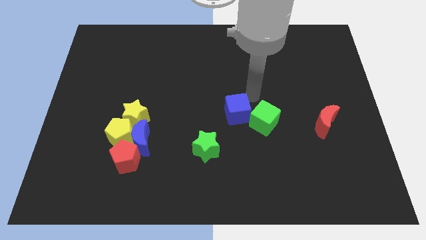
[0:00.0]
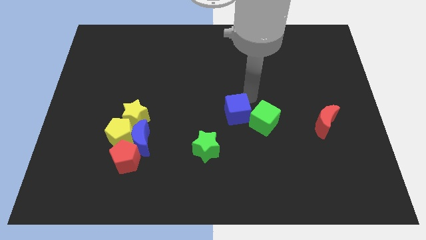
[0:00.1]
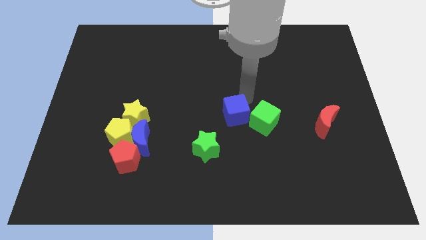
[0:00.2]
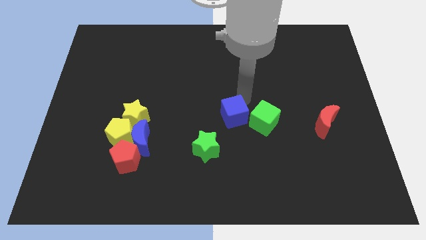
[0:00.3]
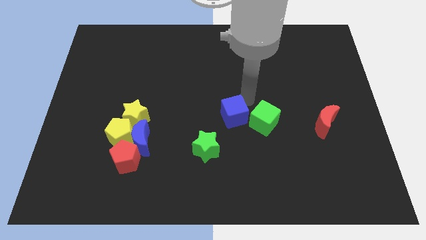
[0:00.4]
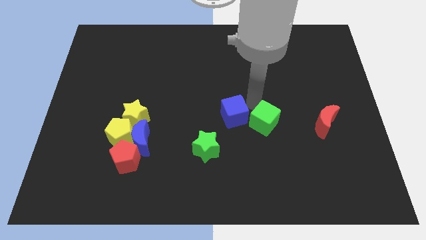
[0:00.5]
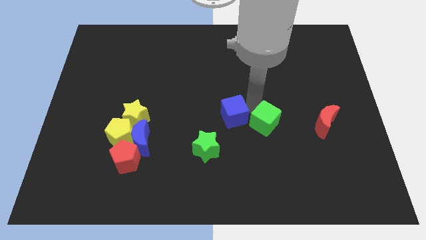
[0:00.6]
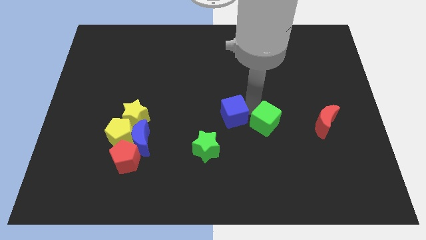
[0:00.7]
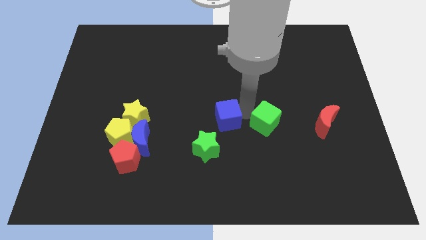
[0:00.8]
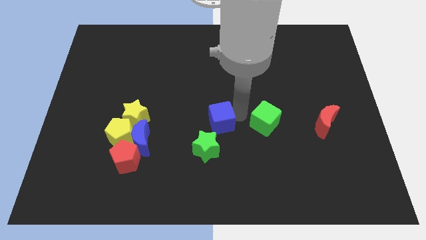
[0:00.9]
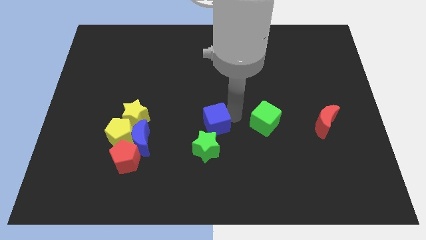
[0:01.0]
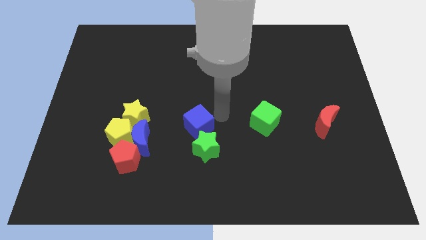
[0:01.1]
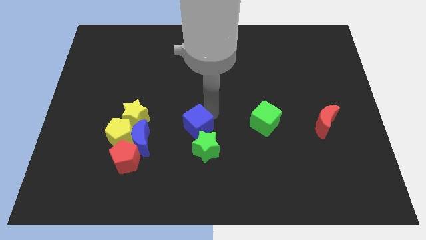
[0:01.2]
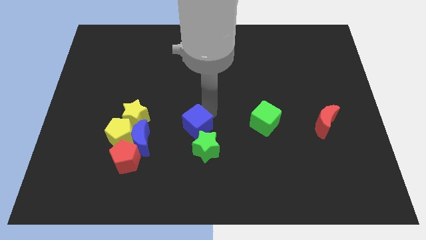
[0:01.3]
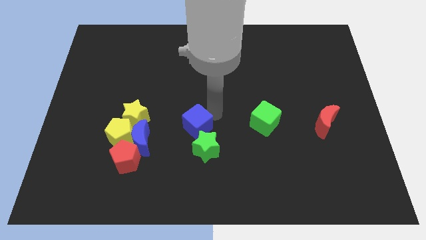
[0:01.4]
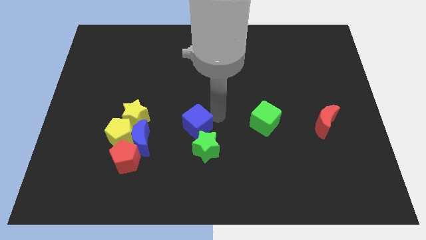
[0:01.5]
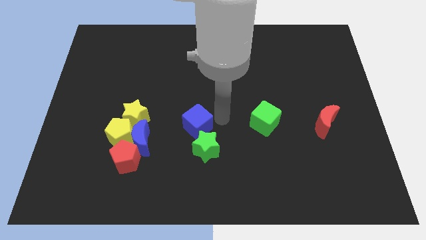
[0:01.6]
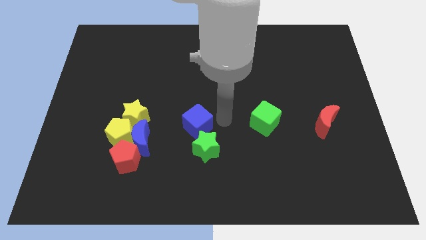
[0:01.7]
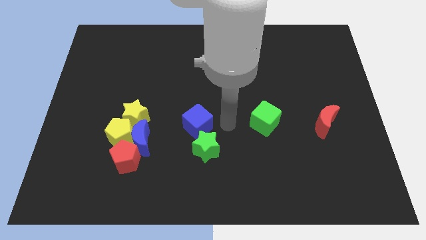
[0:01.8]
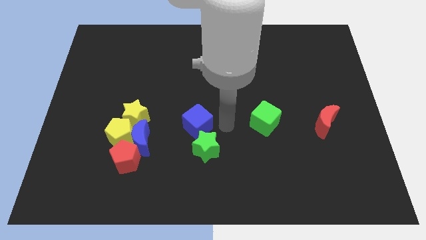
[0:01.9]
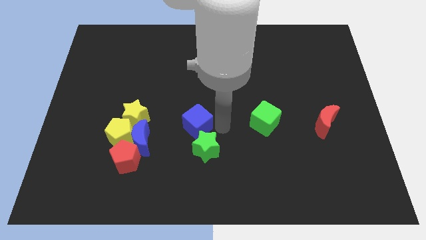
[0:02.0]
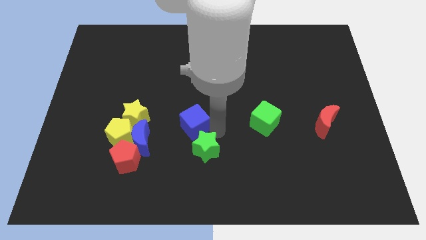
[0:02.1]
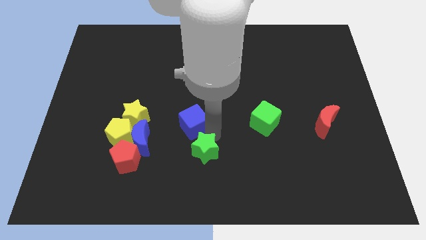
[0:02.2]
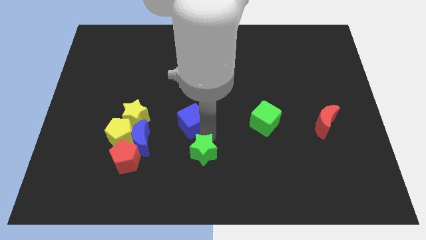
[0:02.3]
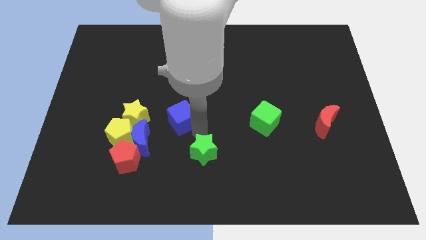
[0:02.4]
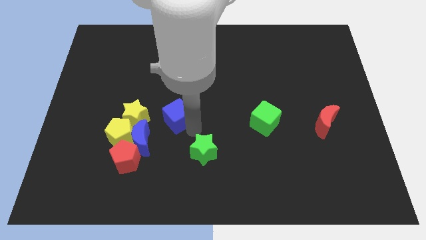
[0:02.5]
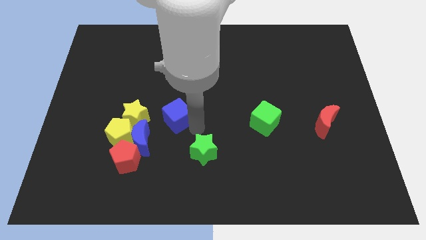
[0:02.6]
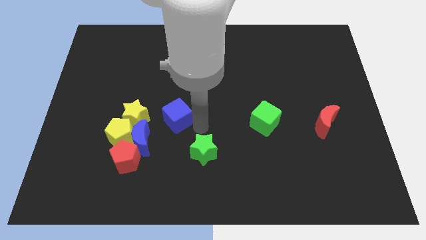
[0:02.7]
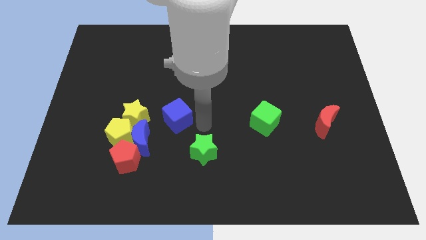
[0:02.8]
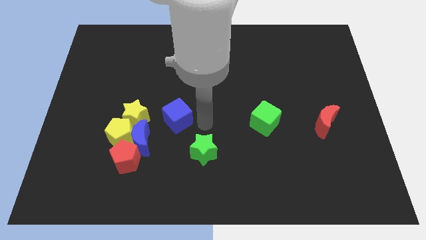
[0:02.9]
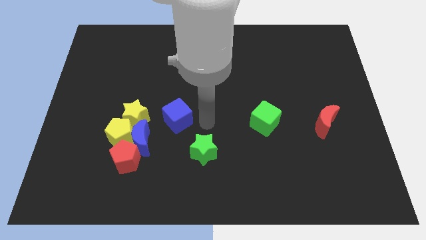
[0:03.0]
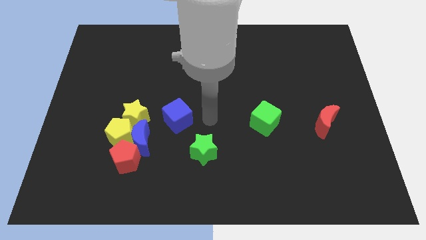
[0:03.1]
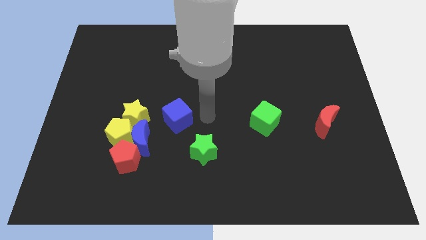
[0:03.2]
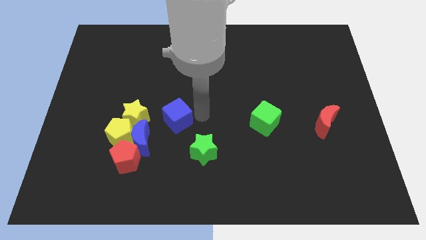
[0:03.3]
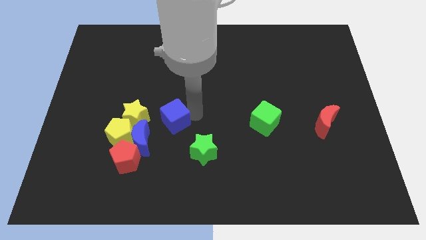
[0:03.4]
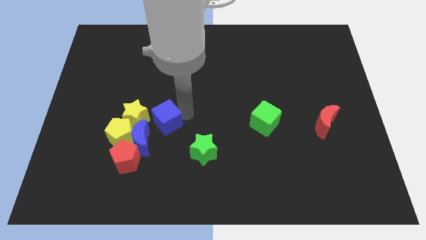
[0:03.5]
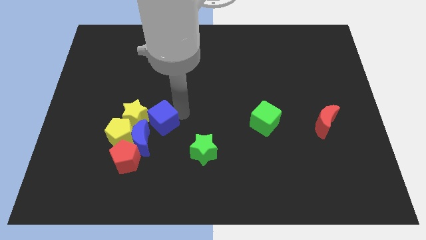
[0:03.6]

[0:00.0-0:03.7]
separate the blue cube from the green cube

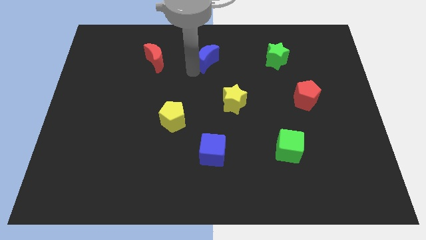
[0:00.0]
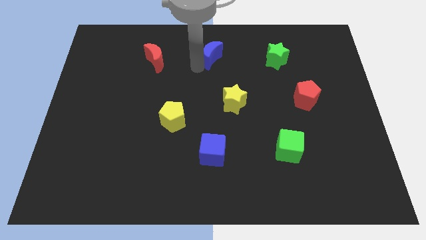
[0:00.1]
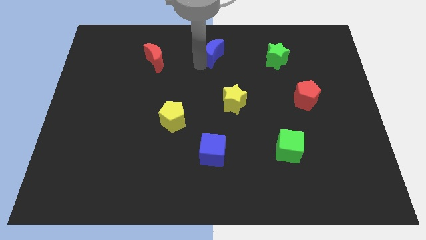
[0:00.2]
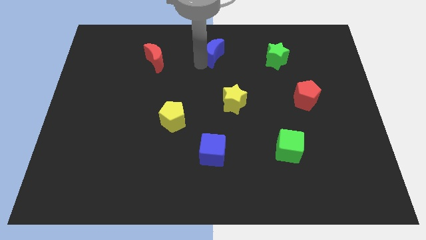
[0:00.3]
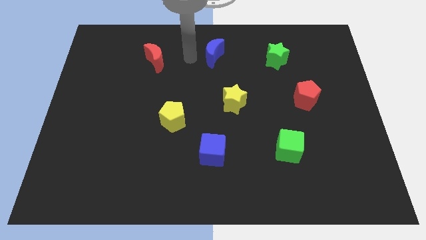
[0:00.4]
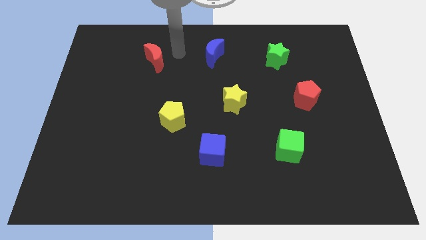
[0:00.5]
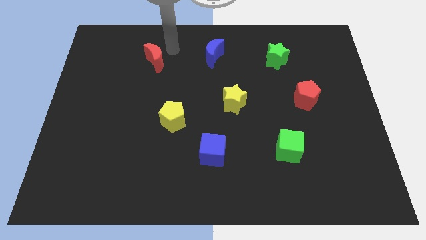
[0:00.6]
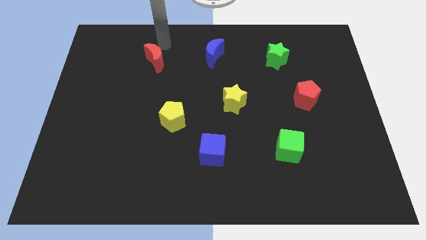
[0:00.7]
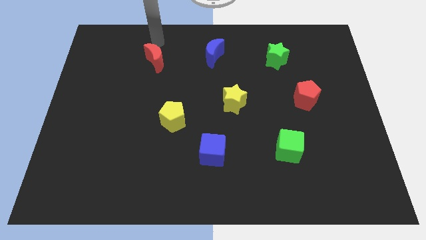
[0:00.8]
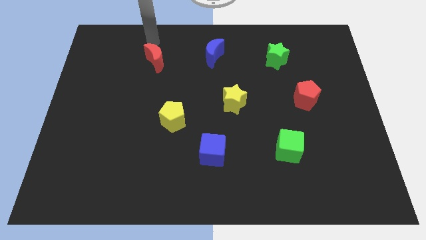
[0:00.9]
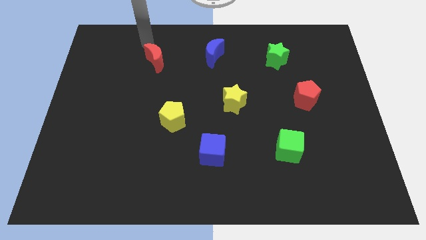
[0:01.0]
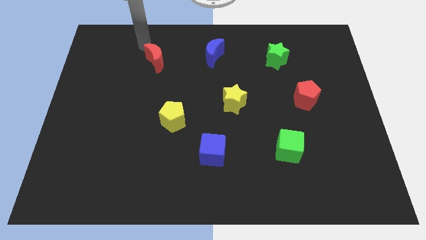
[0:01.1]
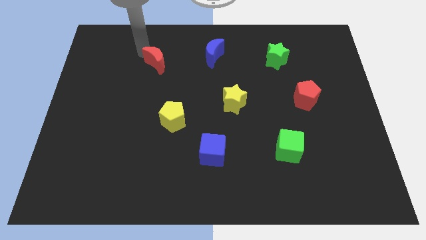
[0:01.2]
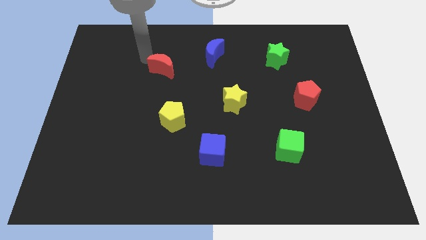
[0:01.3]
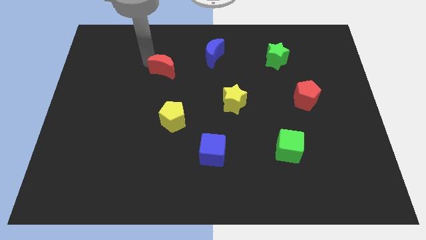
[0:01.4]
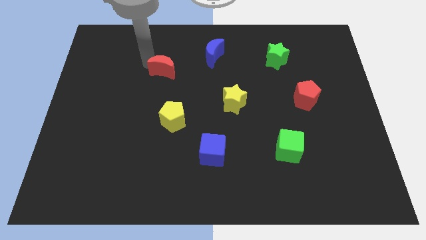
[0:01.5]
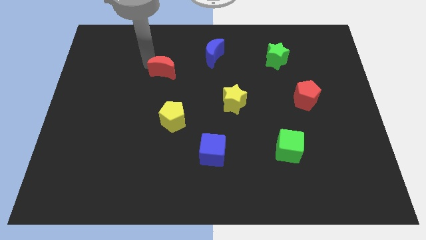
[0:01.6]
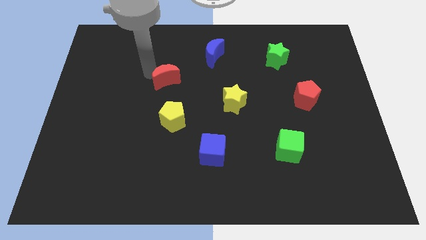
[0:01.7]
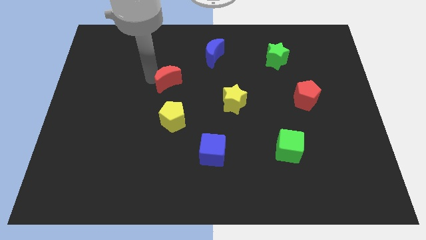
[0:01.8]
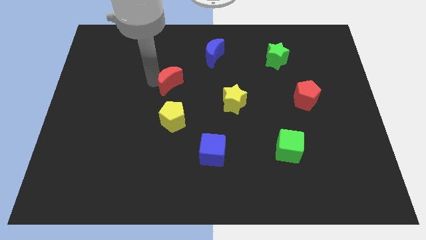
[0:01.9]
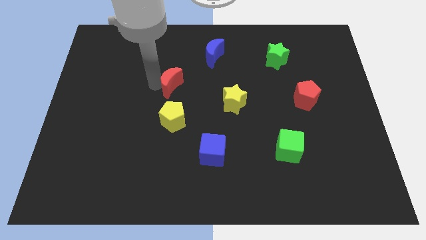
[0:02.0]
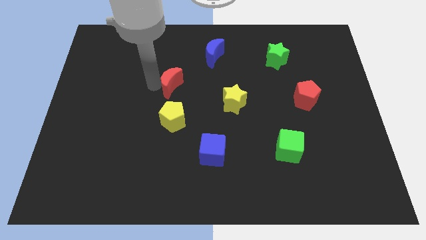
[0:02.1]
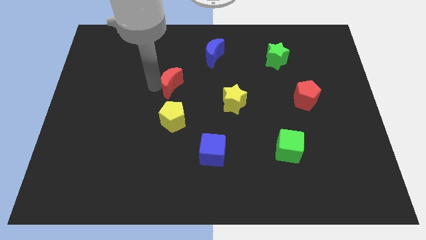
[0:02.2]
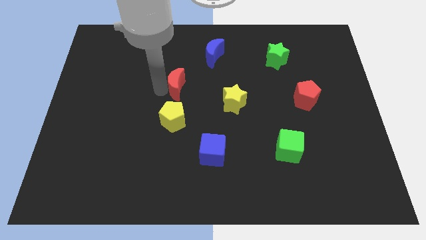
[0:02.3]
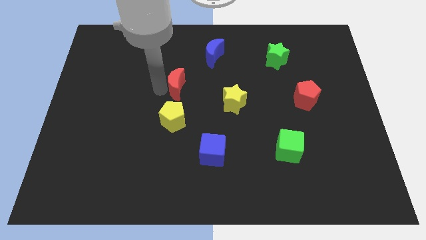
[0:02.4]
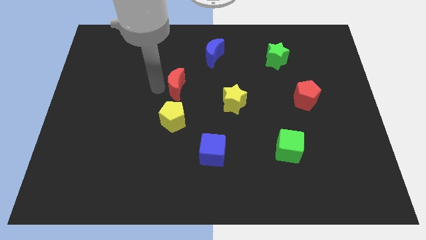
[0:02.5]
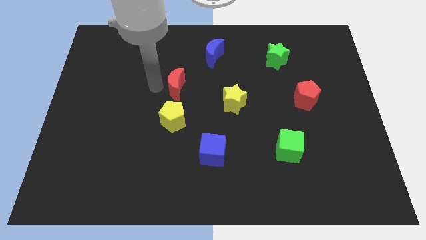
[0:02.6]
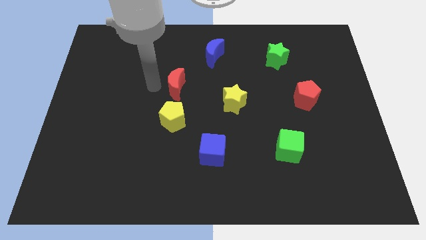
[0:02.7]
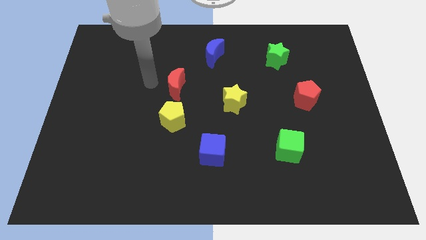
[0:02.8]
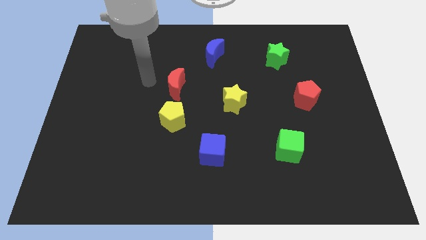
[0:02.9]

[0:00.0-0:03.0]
move the red moon towards the yellow pentagon

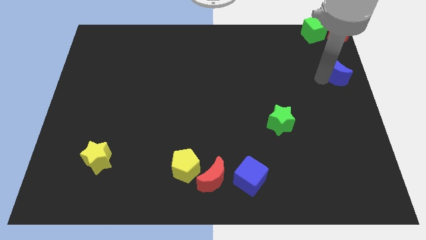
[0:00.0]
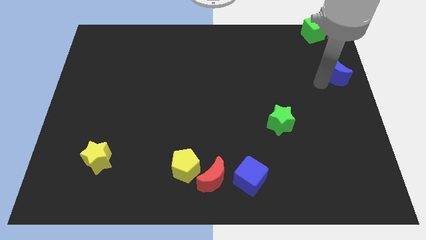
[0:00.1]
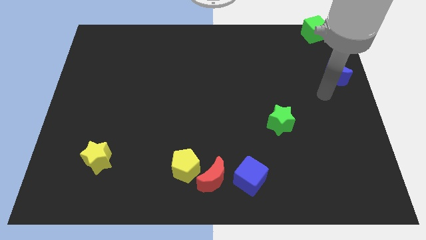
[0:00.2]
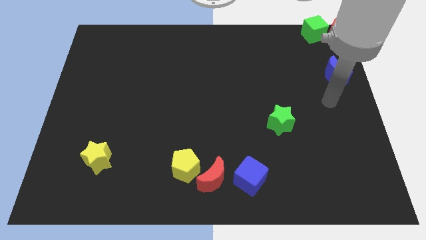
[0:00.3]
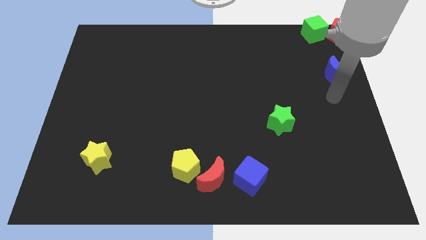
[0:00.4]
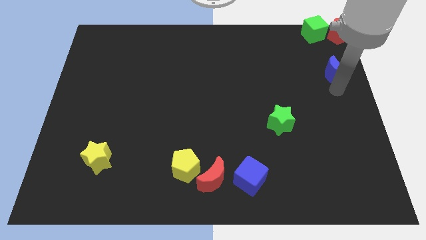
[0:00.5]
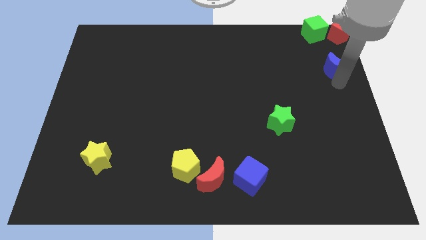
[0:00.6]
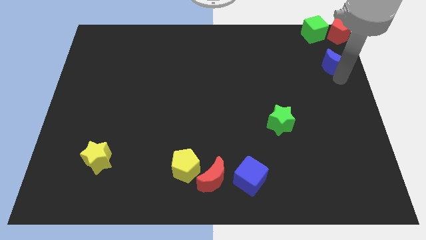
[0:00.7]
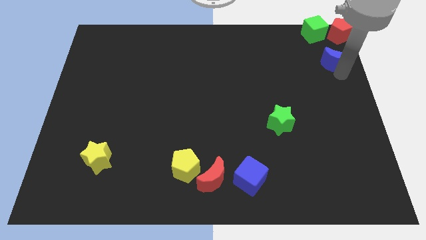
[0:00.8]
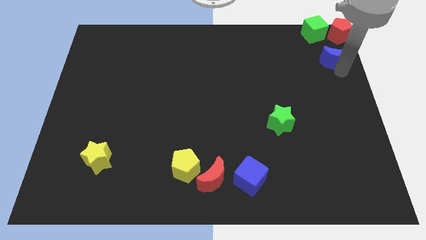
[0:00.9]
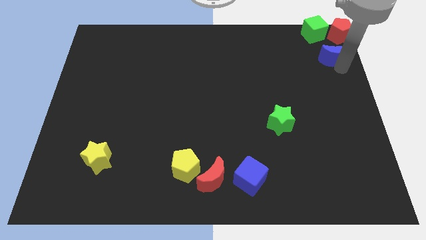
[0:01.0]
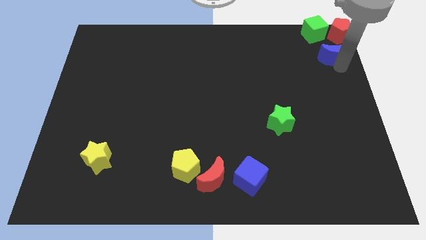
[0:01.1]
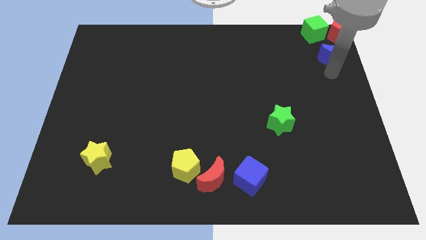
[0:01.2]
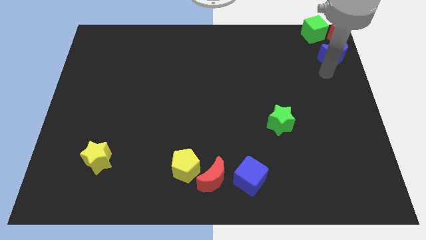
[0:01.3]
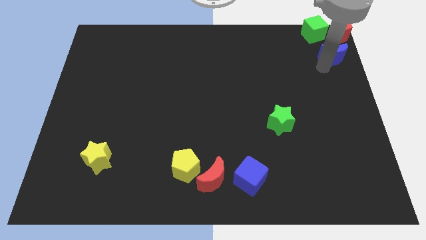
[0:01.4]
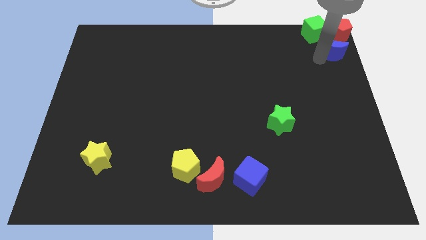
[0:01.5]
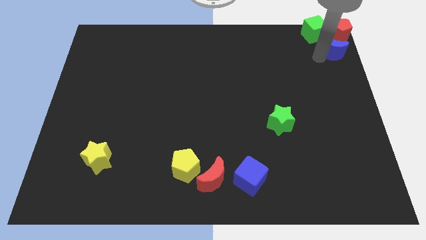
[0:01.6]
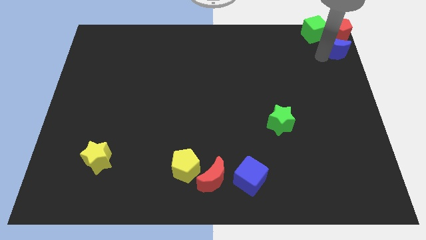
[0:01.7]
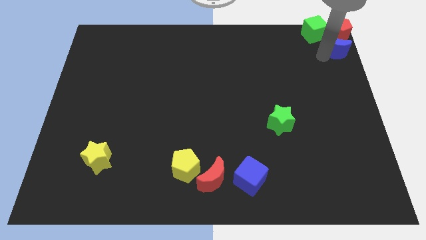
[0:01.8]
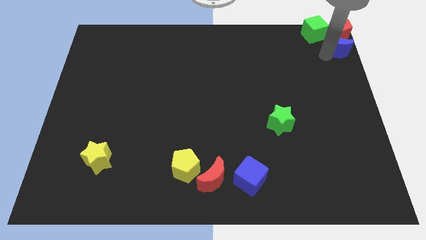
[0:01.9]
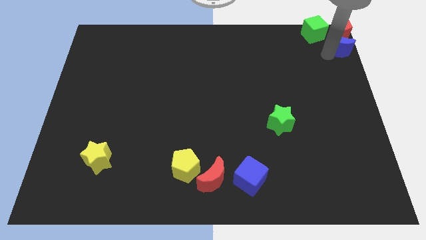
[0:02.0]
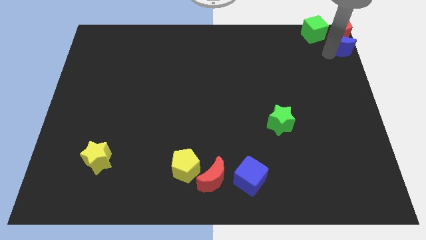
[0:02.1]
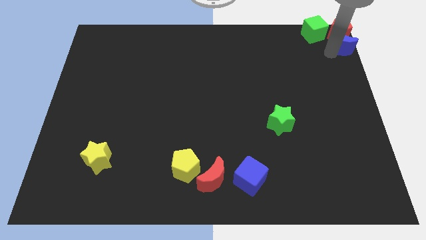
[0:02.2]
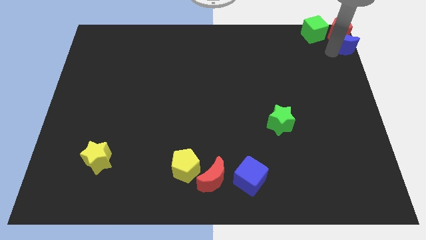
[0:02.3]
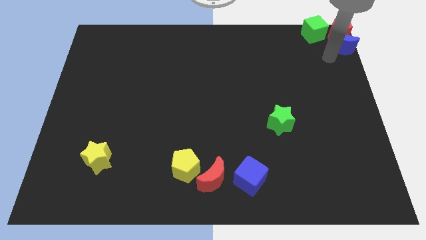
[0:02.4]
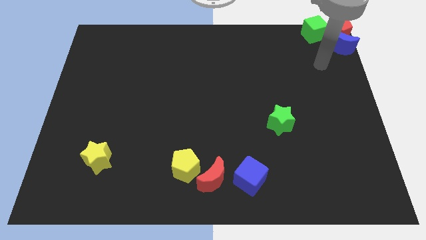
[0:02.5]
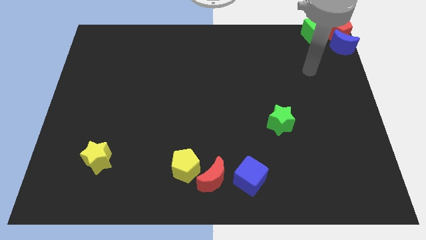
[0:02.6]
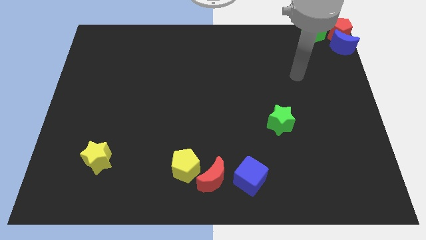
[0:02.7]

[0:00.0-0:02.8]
move the blue moon to the bottom side of the red pentagon
